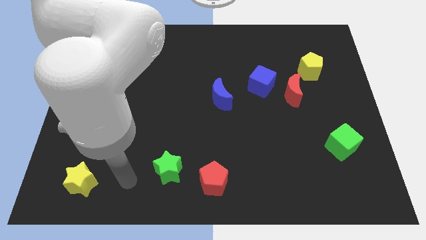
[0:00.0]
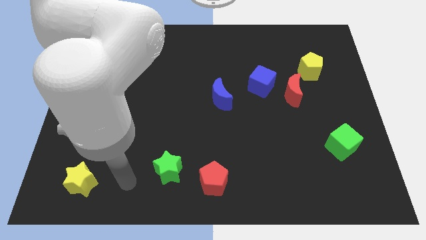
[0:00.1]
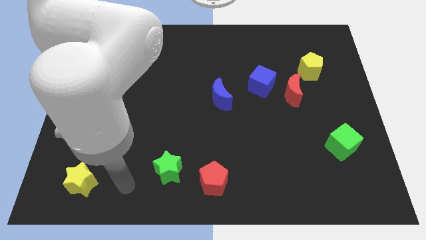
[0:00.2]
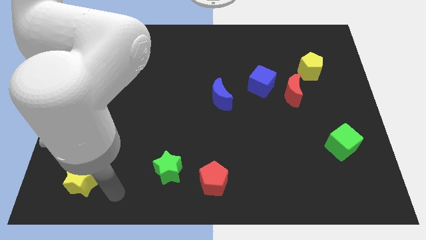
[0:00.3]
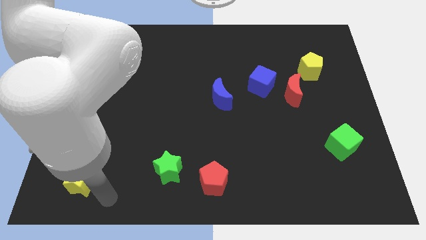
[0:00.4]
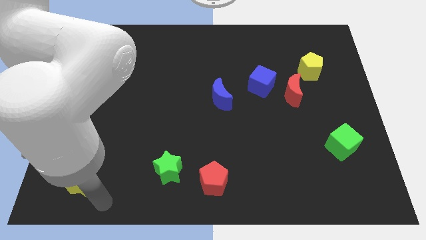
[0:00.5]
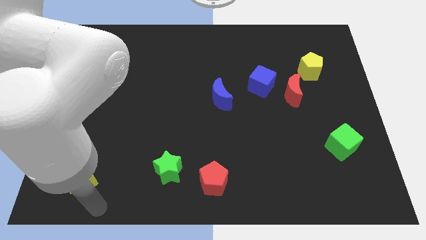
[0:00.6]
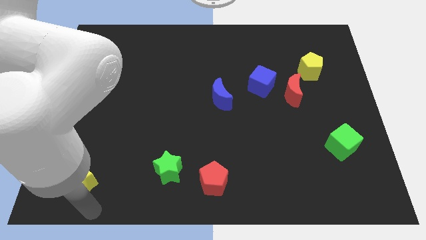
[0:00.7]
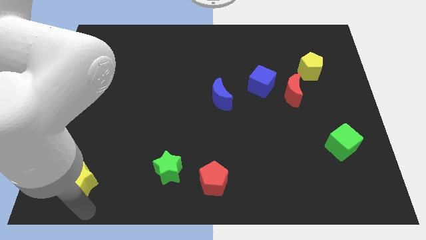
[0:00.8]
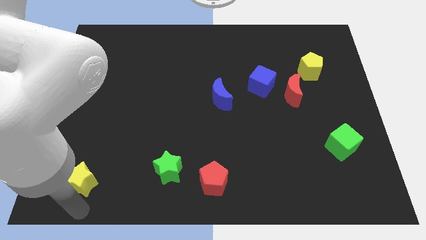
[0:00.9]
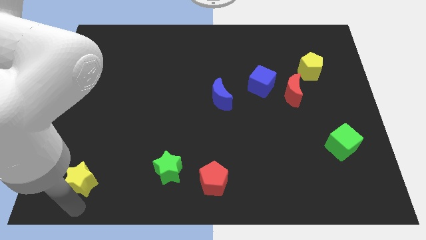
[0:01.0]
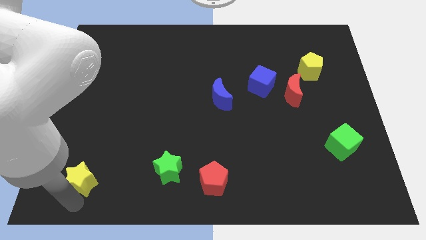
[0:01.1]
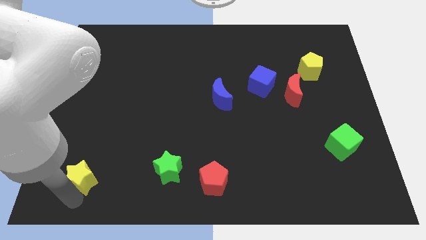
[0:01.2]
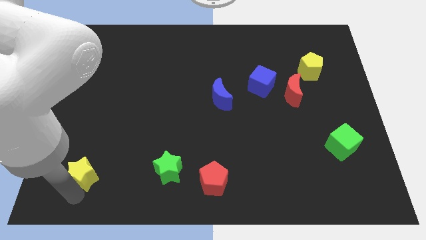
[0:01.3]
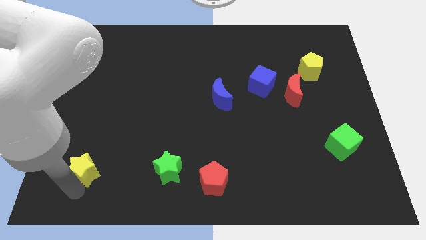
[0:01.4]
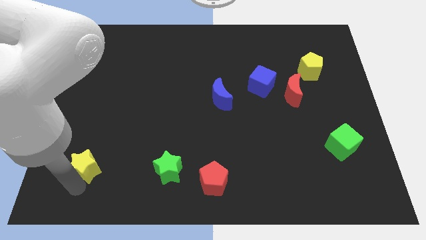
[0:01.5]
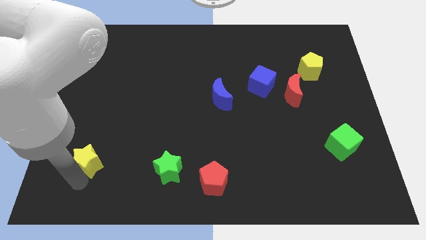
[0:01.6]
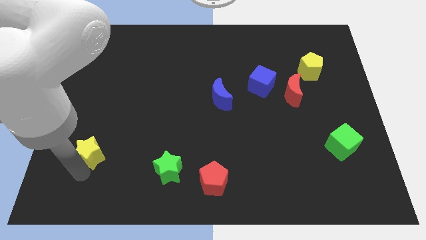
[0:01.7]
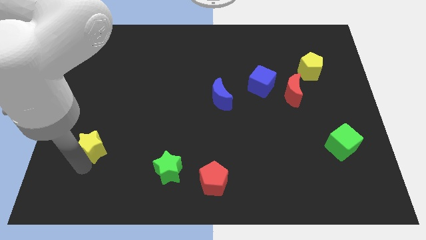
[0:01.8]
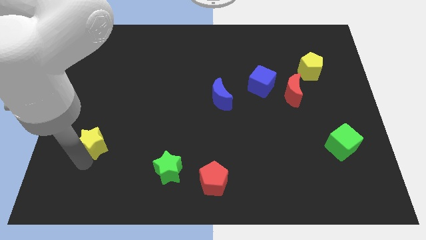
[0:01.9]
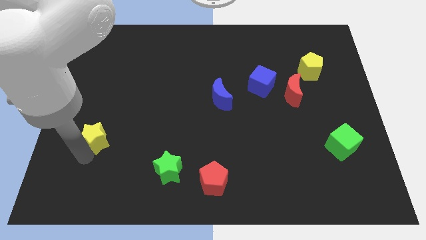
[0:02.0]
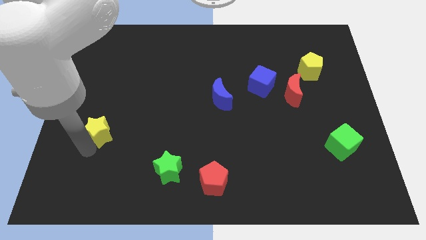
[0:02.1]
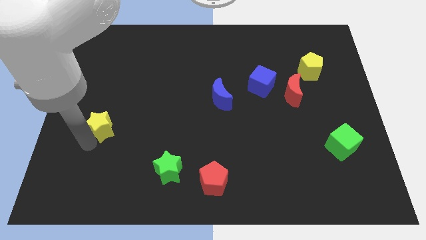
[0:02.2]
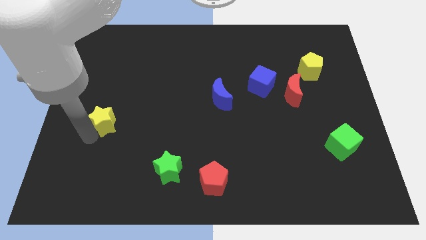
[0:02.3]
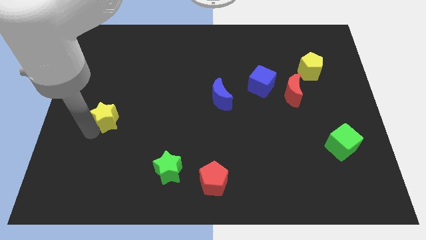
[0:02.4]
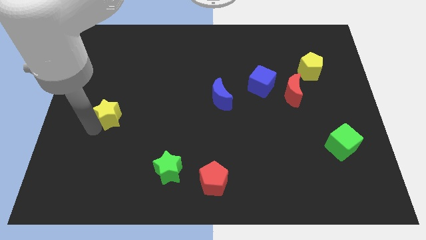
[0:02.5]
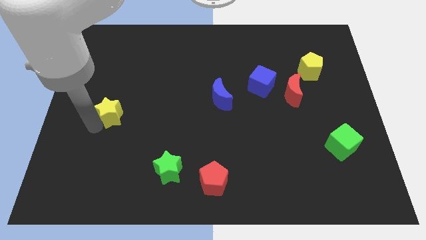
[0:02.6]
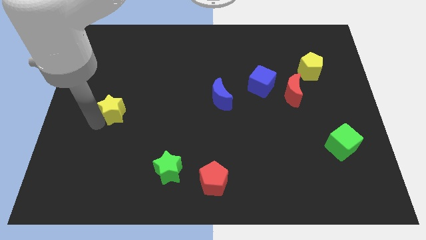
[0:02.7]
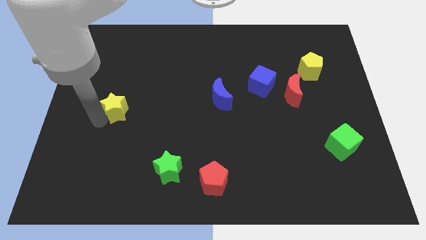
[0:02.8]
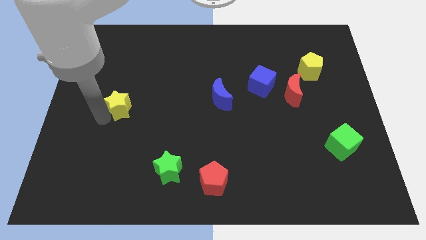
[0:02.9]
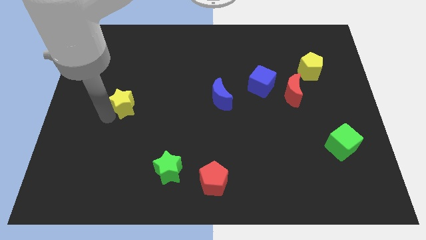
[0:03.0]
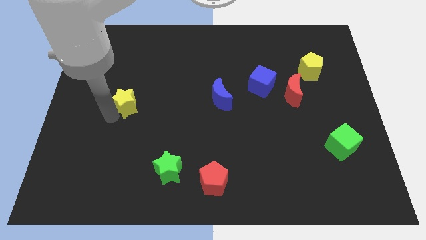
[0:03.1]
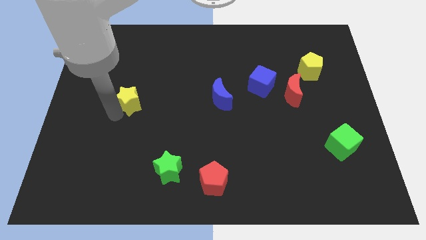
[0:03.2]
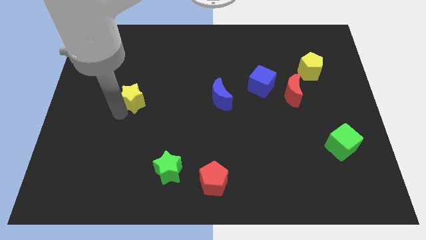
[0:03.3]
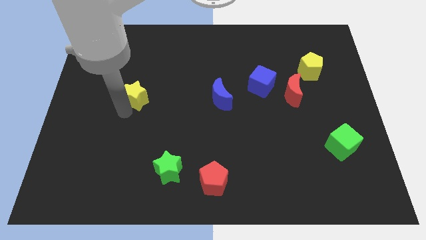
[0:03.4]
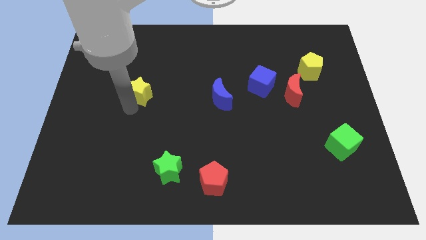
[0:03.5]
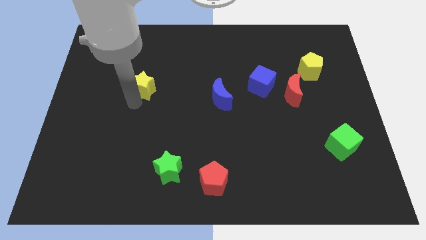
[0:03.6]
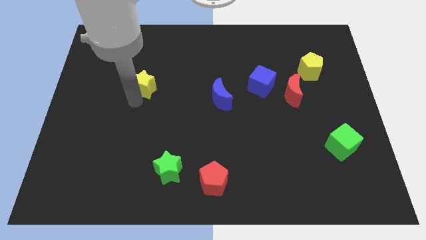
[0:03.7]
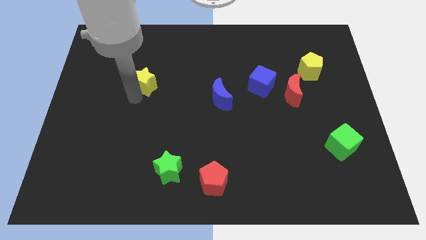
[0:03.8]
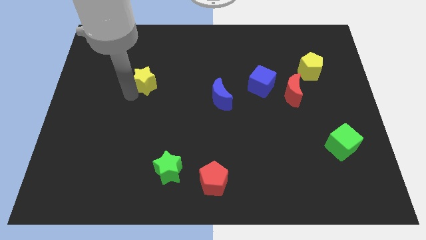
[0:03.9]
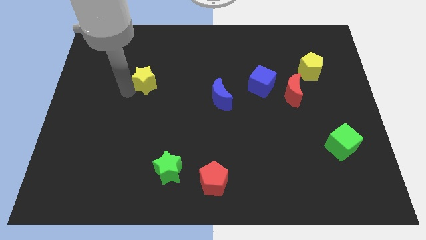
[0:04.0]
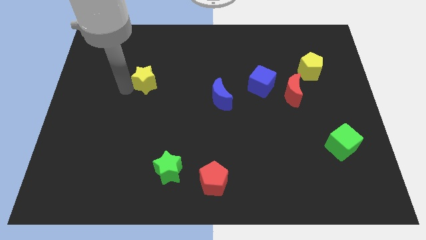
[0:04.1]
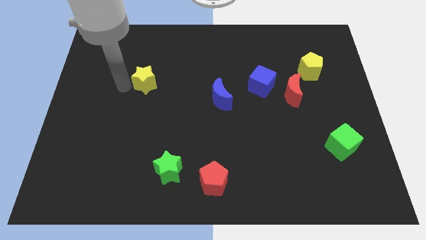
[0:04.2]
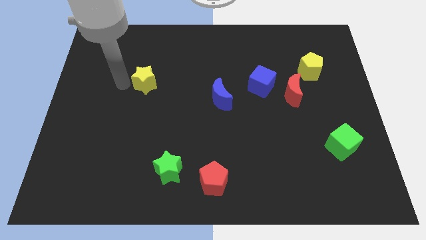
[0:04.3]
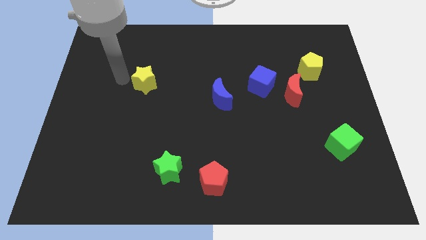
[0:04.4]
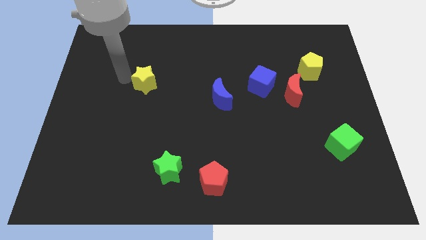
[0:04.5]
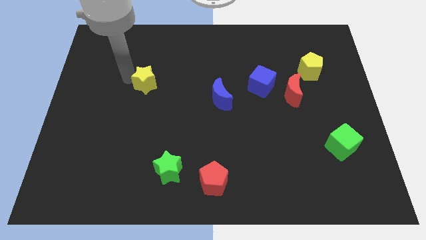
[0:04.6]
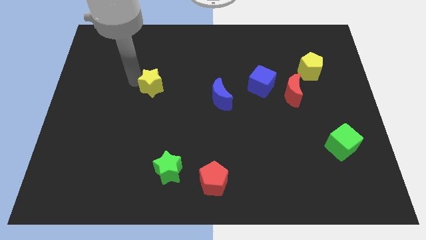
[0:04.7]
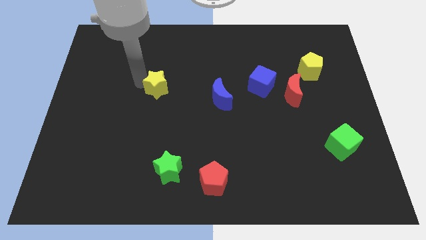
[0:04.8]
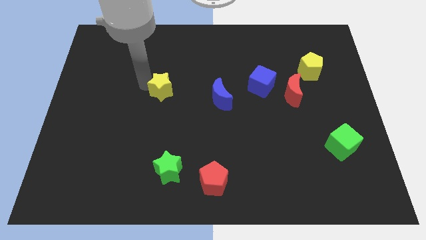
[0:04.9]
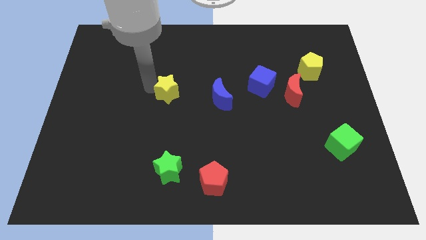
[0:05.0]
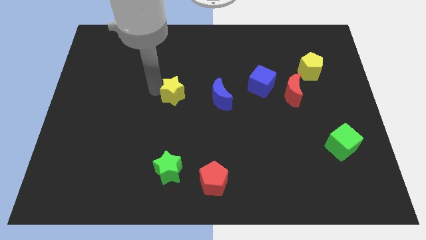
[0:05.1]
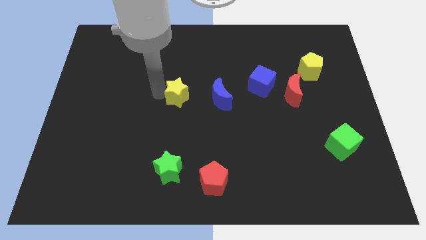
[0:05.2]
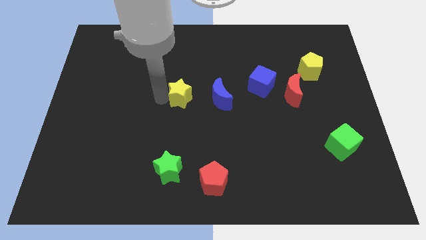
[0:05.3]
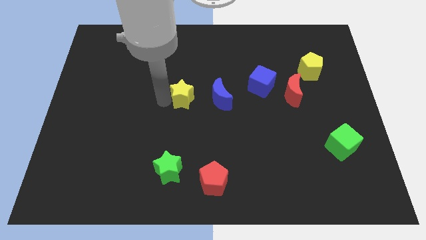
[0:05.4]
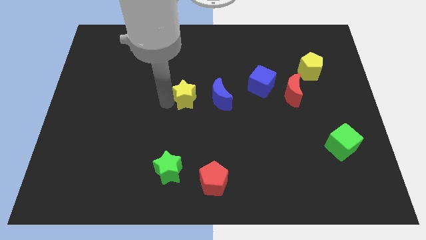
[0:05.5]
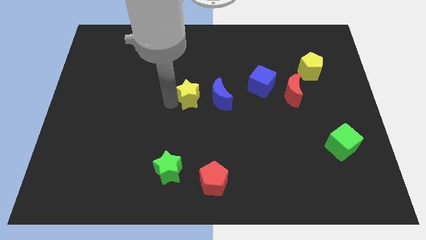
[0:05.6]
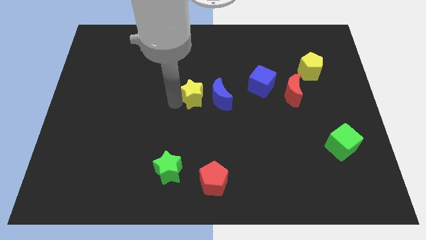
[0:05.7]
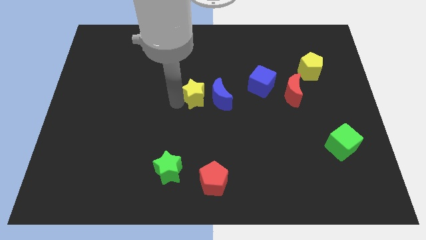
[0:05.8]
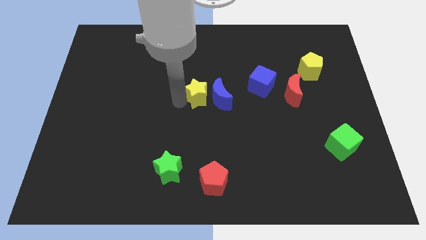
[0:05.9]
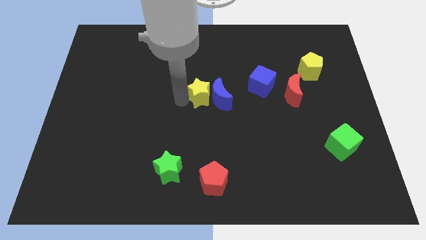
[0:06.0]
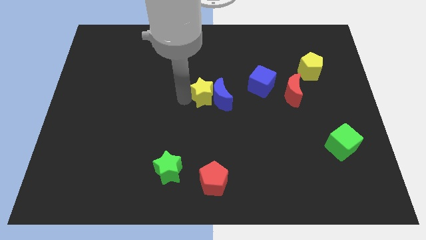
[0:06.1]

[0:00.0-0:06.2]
push the yellow star close to the blue moon

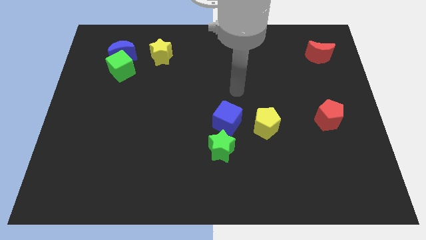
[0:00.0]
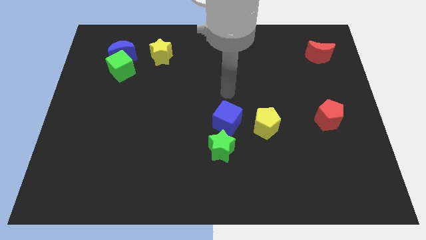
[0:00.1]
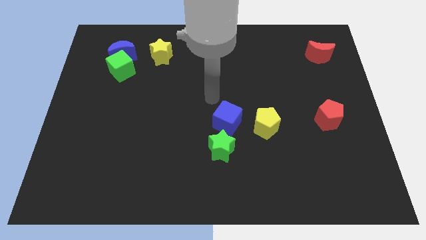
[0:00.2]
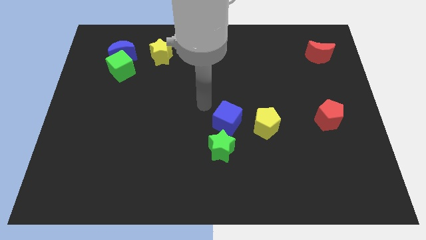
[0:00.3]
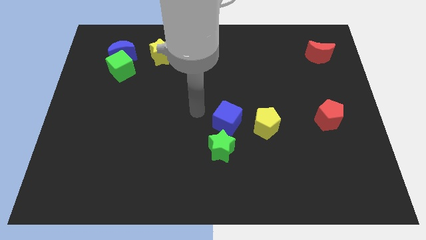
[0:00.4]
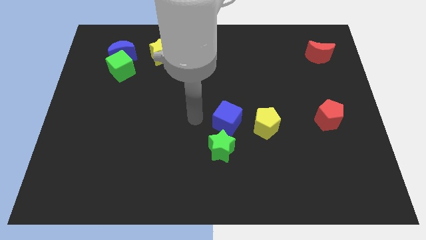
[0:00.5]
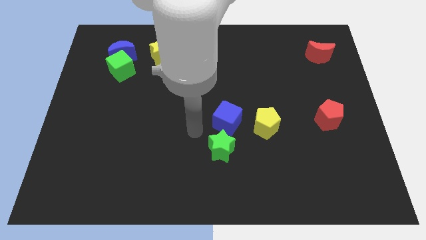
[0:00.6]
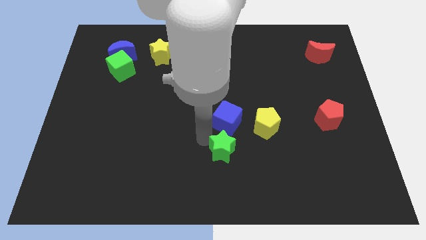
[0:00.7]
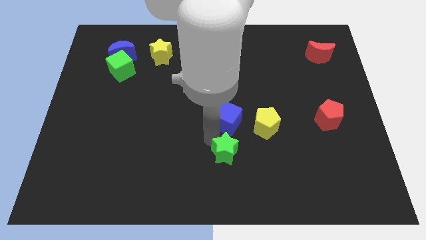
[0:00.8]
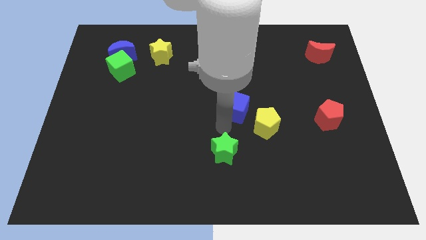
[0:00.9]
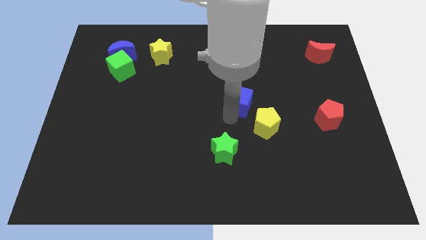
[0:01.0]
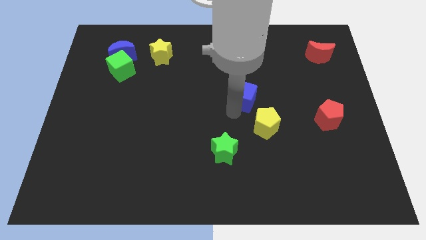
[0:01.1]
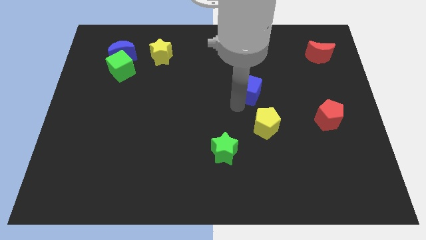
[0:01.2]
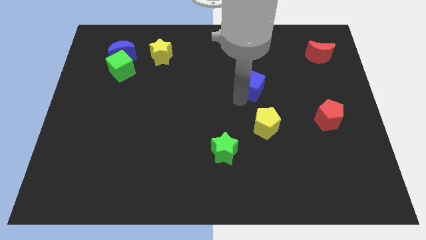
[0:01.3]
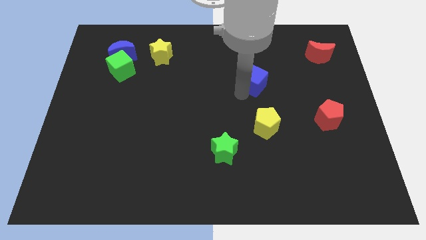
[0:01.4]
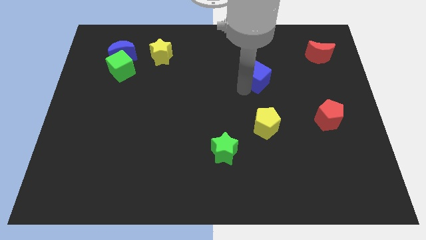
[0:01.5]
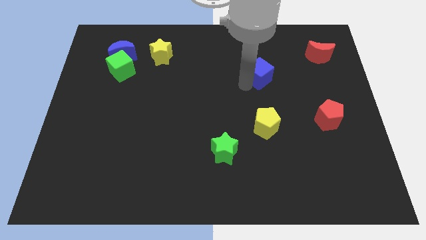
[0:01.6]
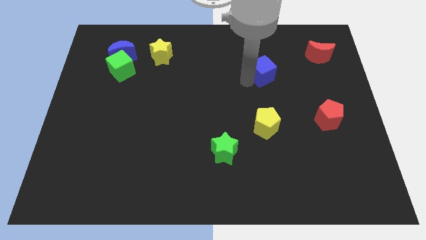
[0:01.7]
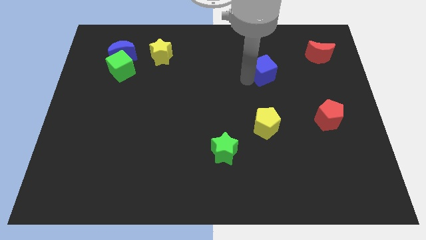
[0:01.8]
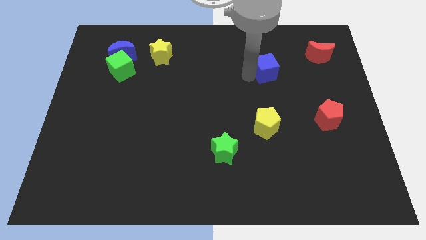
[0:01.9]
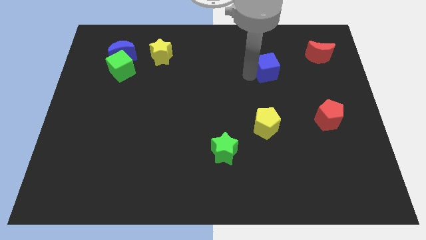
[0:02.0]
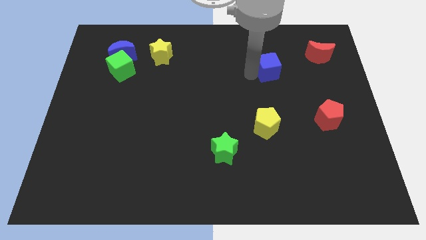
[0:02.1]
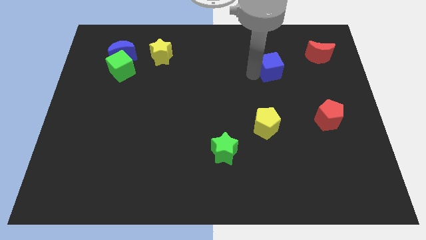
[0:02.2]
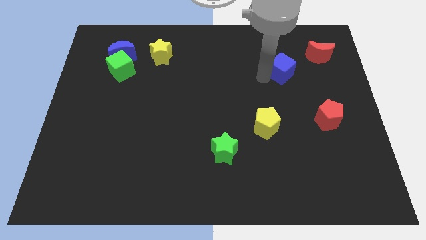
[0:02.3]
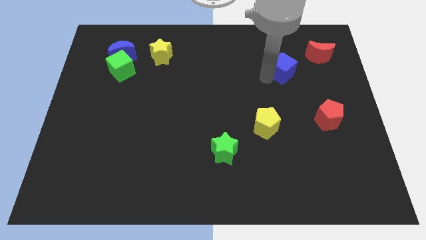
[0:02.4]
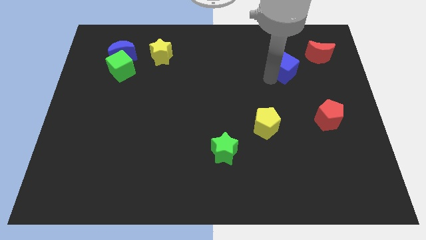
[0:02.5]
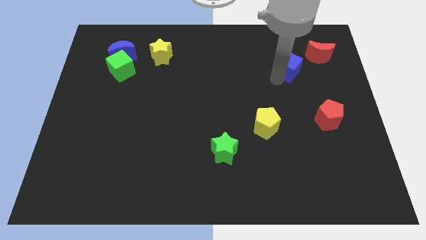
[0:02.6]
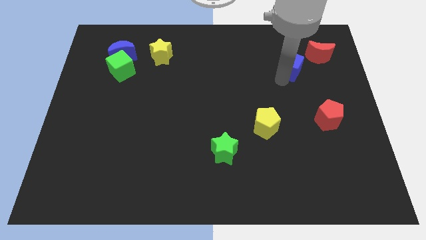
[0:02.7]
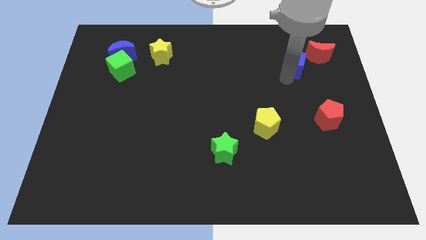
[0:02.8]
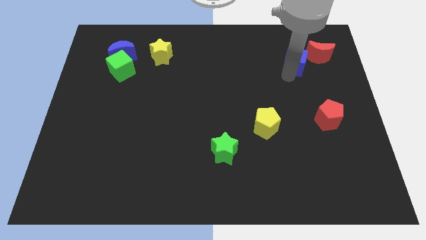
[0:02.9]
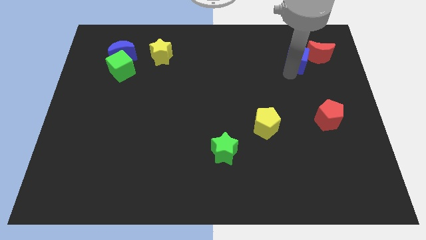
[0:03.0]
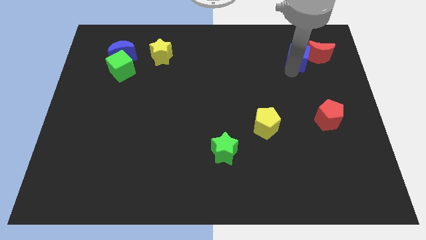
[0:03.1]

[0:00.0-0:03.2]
slide the blue cube close to the red moon
